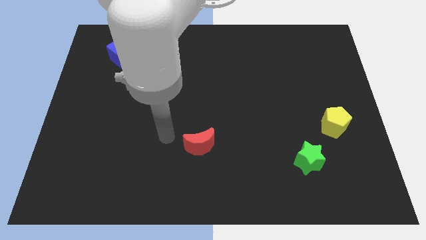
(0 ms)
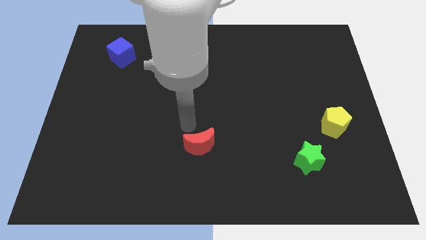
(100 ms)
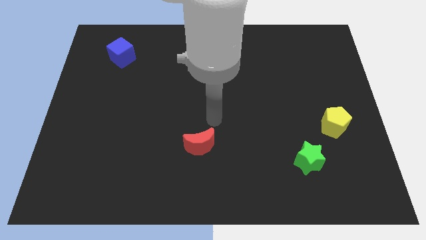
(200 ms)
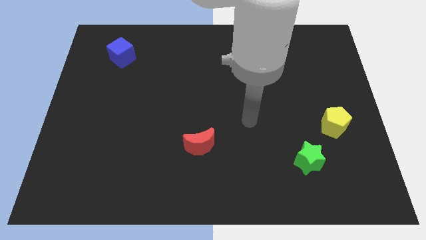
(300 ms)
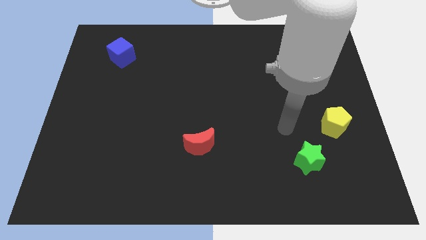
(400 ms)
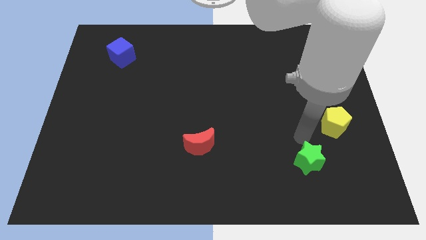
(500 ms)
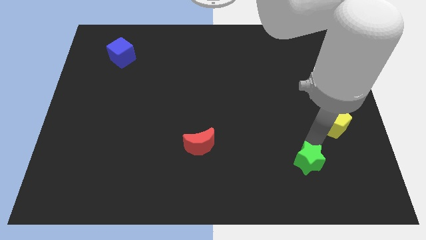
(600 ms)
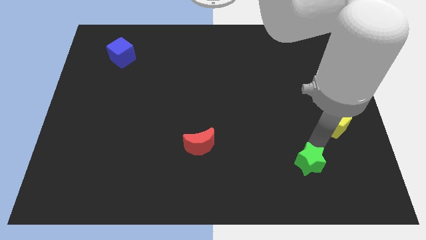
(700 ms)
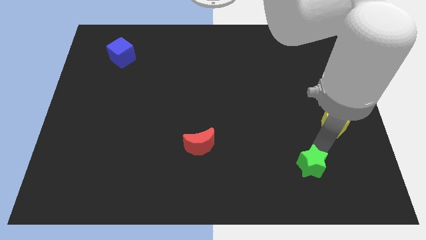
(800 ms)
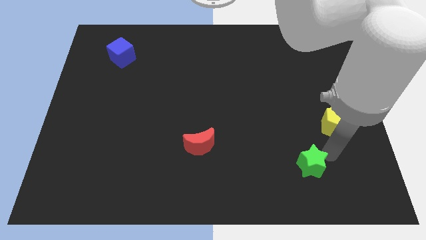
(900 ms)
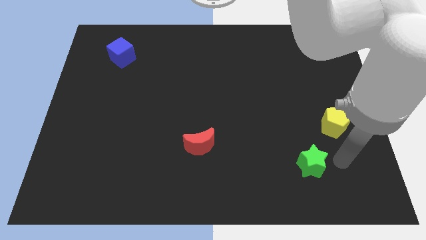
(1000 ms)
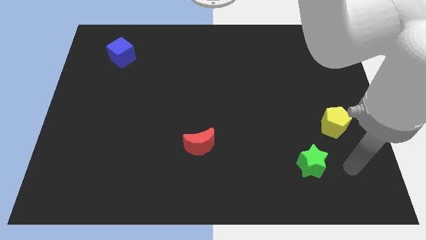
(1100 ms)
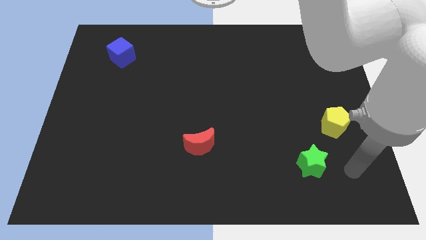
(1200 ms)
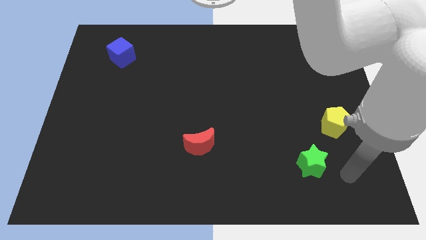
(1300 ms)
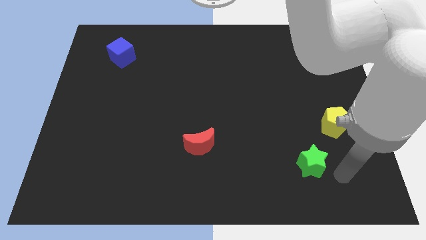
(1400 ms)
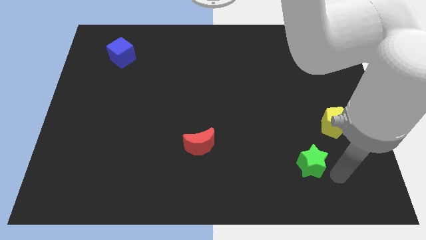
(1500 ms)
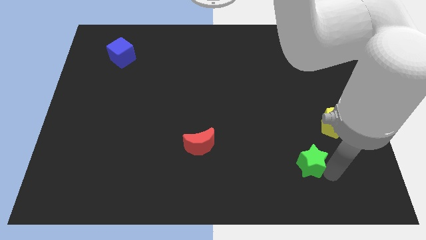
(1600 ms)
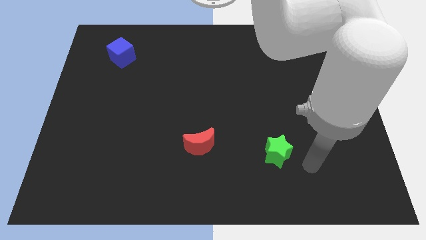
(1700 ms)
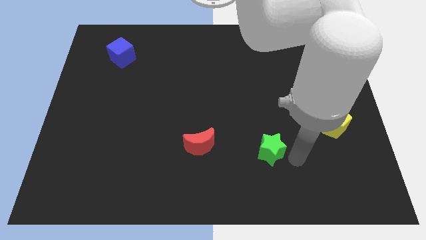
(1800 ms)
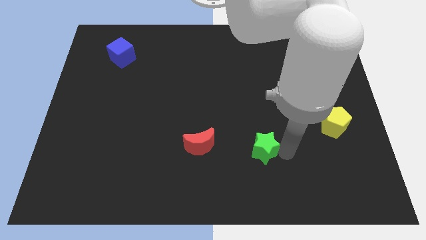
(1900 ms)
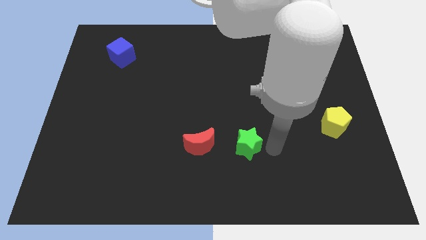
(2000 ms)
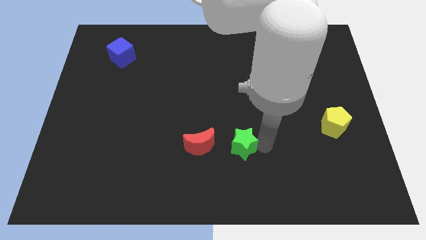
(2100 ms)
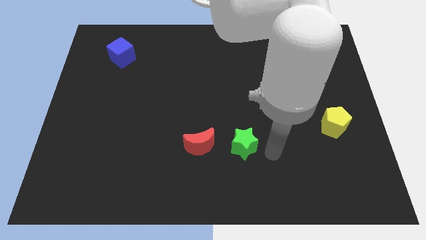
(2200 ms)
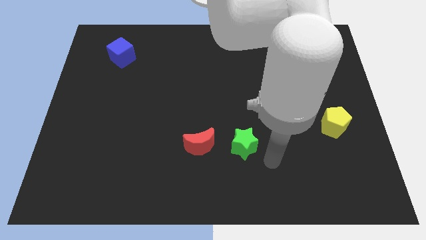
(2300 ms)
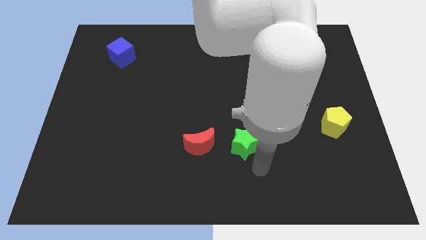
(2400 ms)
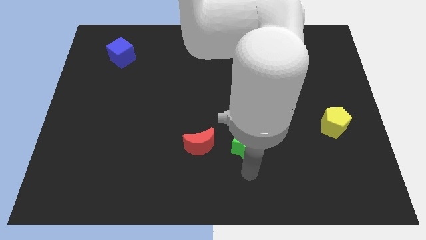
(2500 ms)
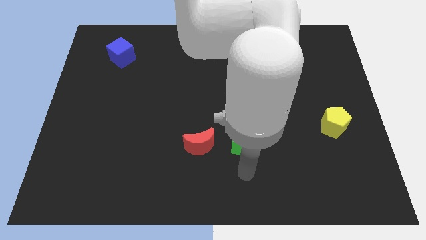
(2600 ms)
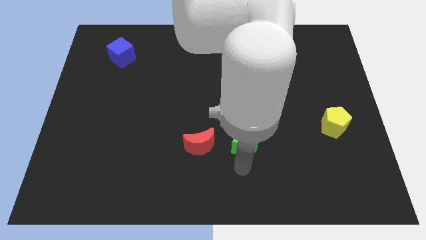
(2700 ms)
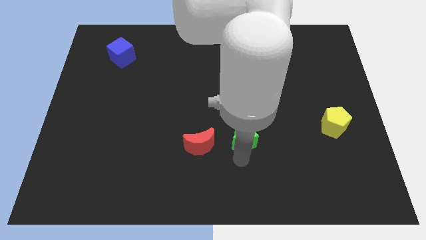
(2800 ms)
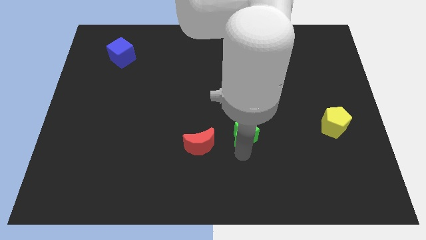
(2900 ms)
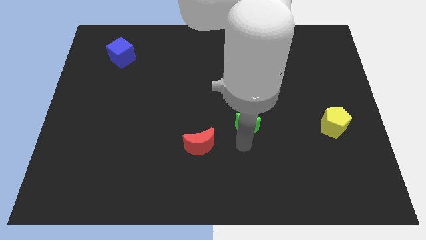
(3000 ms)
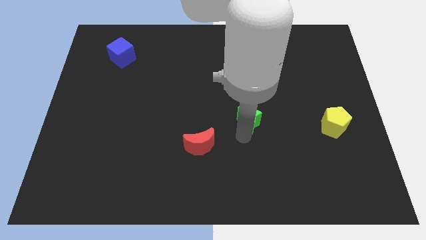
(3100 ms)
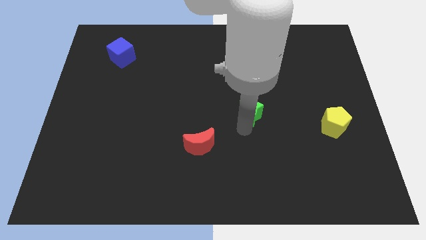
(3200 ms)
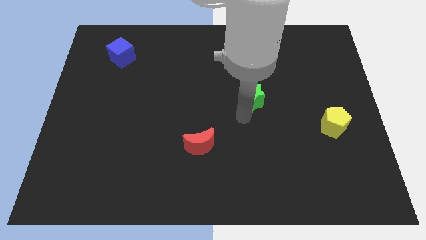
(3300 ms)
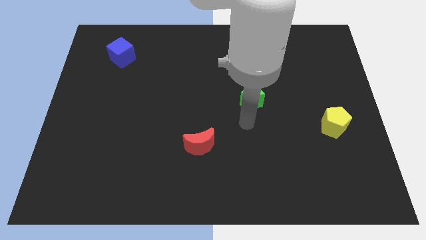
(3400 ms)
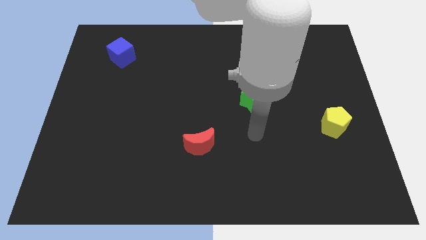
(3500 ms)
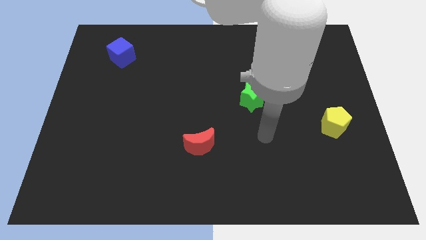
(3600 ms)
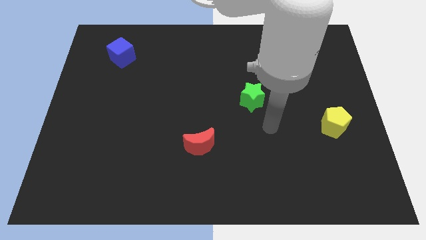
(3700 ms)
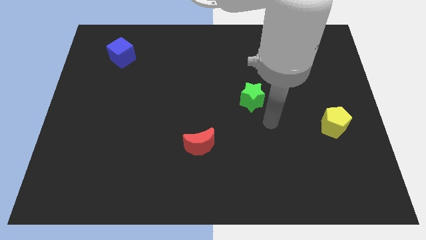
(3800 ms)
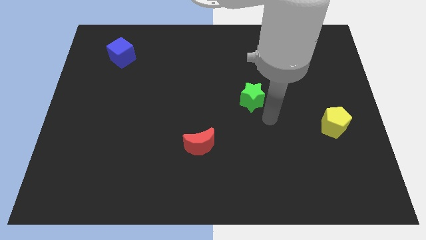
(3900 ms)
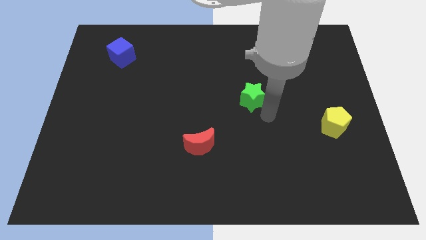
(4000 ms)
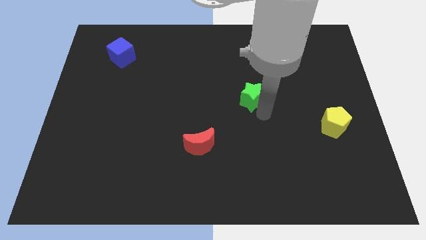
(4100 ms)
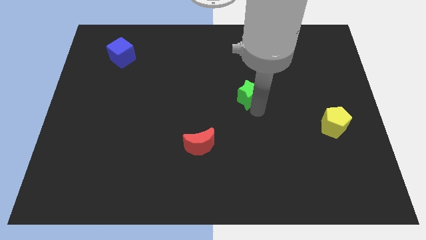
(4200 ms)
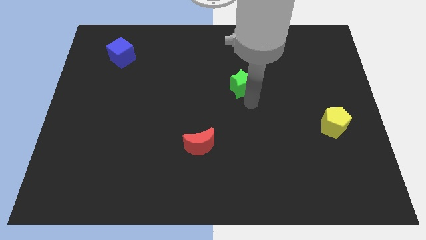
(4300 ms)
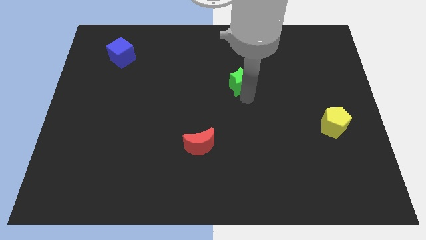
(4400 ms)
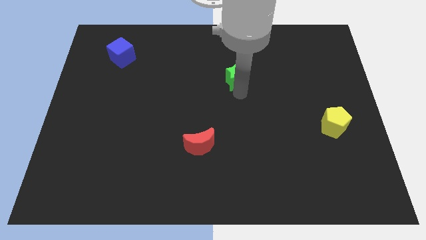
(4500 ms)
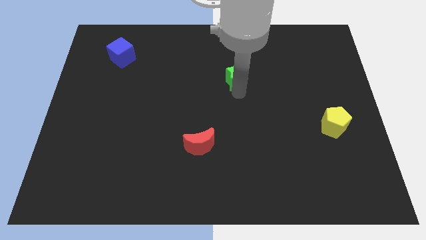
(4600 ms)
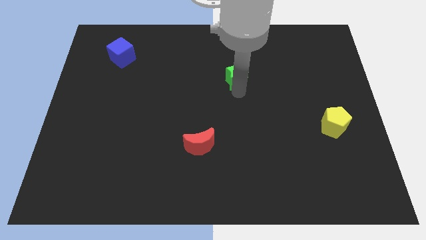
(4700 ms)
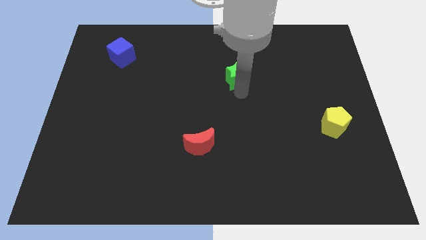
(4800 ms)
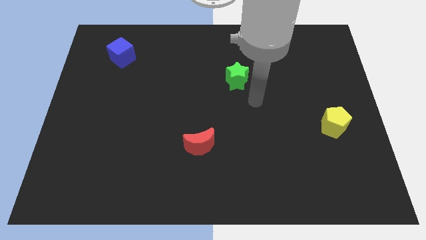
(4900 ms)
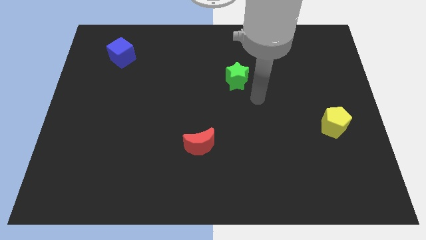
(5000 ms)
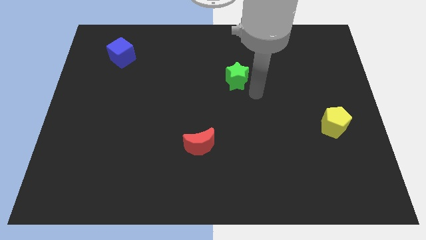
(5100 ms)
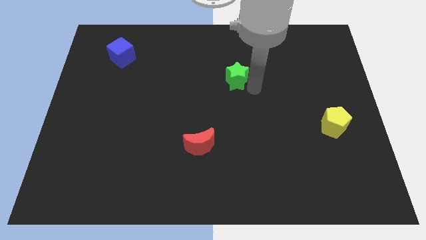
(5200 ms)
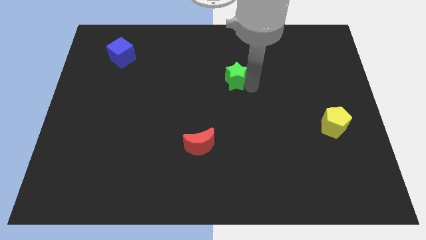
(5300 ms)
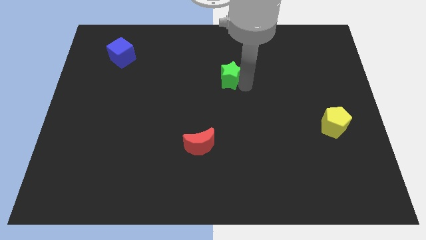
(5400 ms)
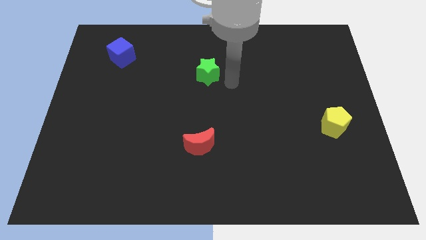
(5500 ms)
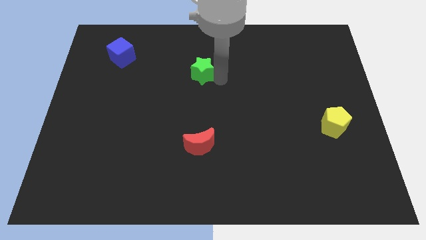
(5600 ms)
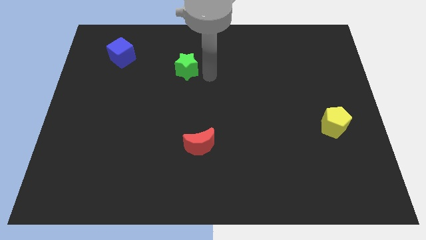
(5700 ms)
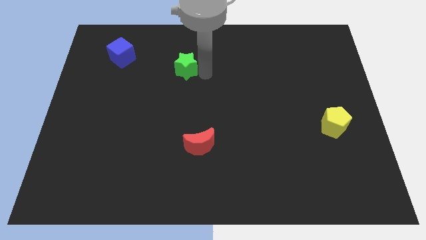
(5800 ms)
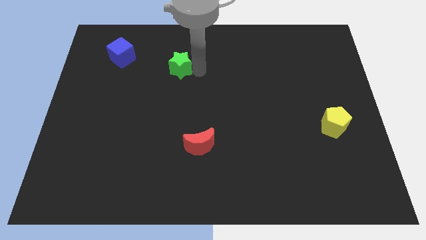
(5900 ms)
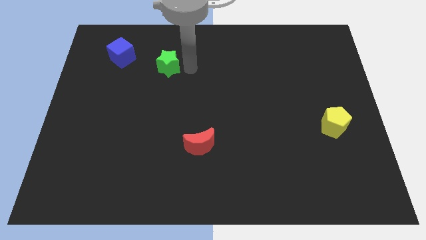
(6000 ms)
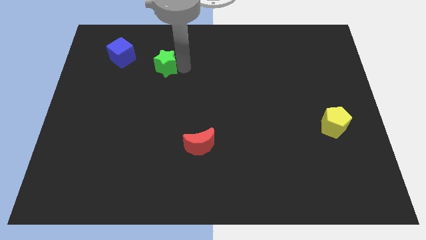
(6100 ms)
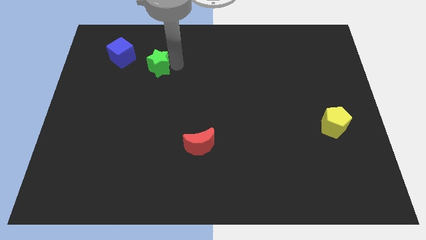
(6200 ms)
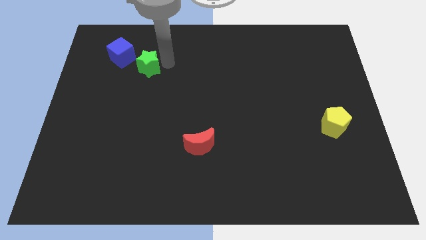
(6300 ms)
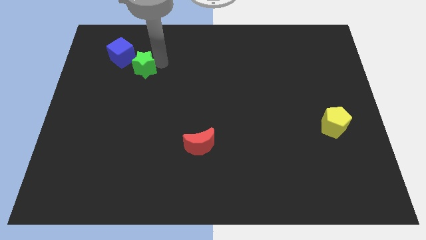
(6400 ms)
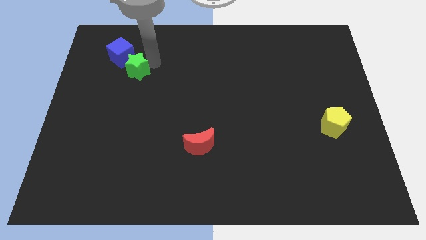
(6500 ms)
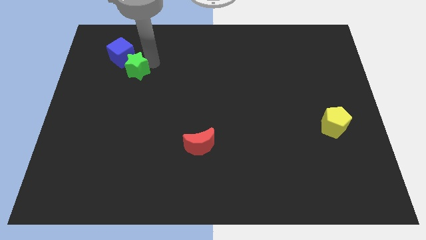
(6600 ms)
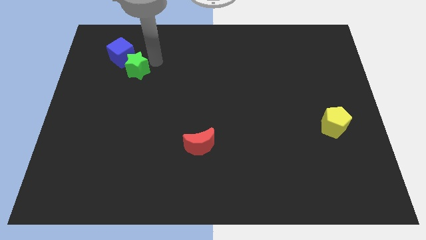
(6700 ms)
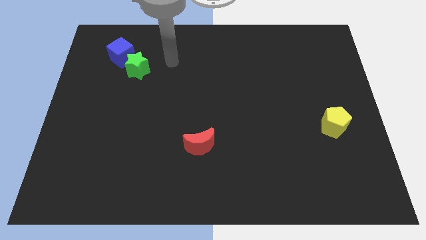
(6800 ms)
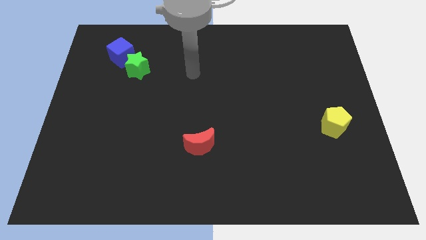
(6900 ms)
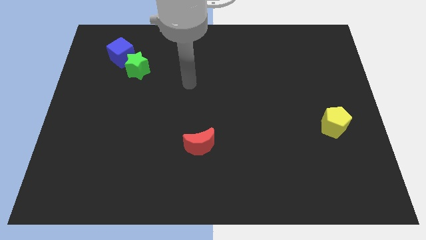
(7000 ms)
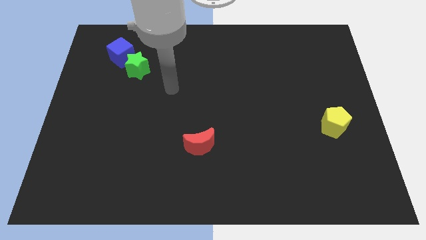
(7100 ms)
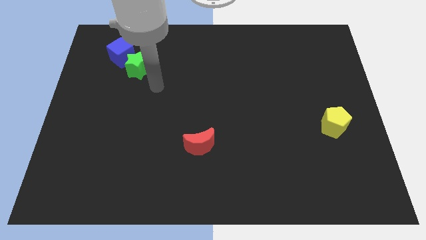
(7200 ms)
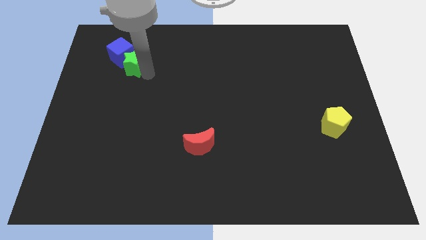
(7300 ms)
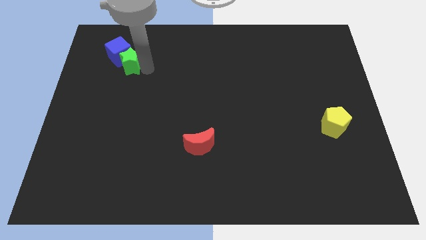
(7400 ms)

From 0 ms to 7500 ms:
slide the green star next to the blue block

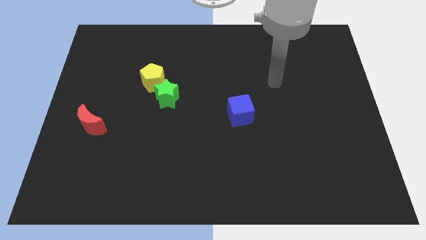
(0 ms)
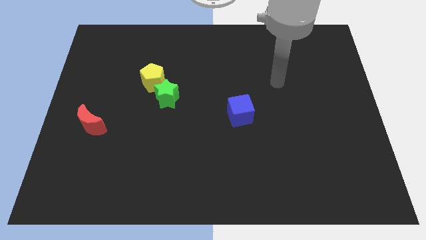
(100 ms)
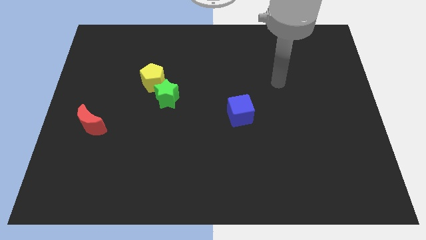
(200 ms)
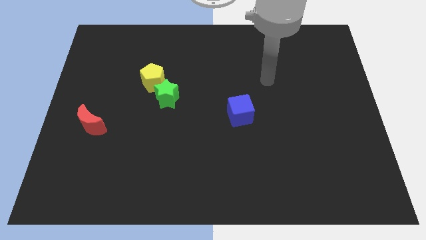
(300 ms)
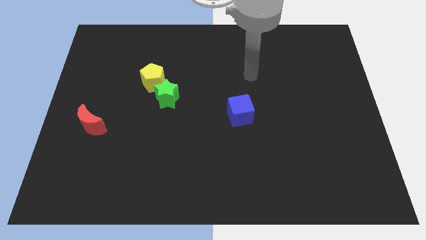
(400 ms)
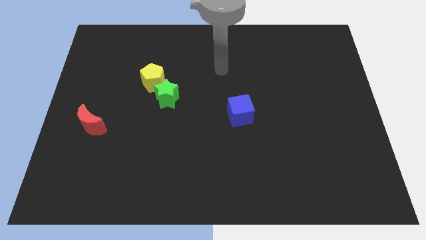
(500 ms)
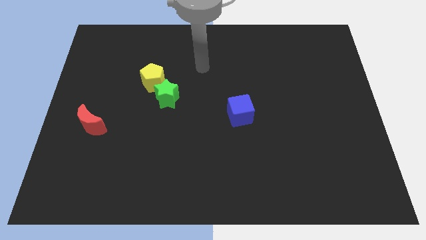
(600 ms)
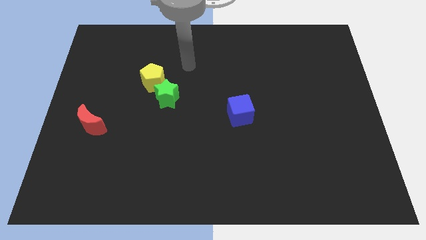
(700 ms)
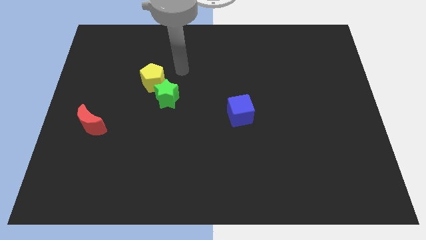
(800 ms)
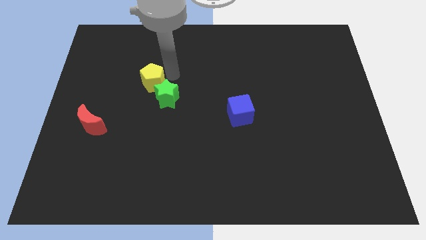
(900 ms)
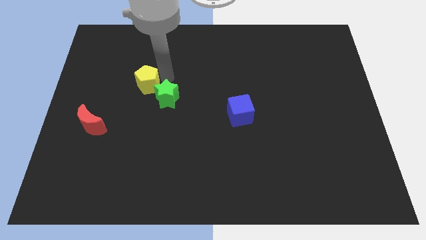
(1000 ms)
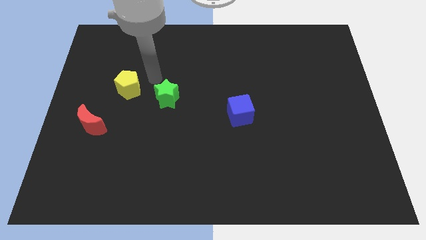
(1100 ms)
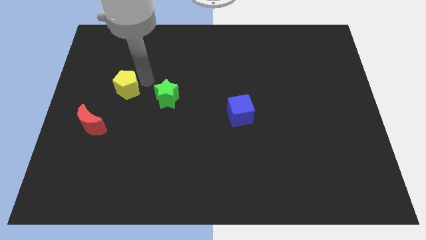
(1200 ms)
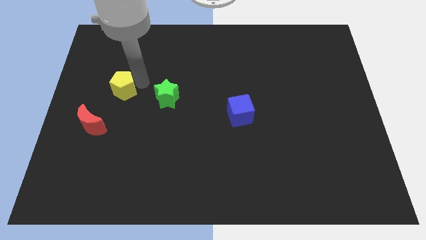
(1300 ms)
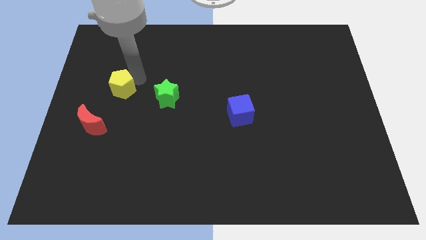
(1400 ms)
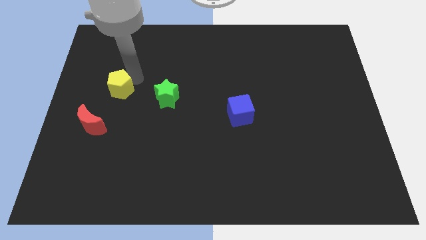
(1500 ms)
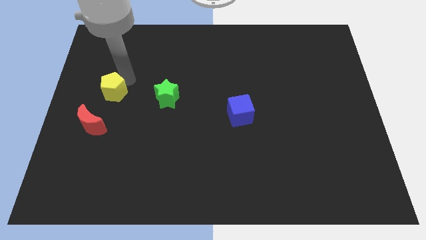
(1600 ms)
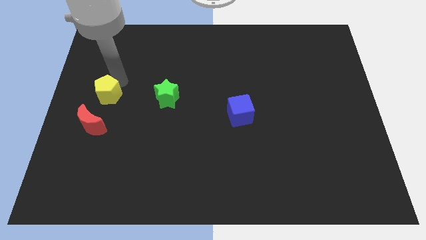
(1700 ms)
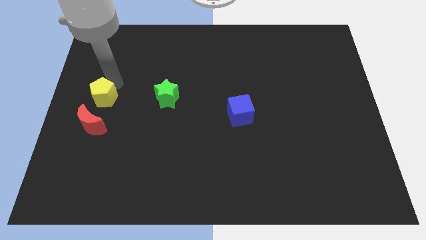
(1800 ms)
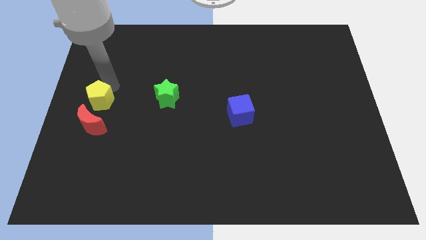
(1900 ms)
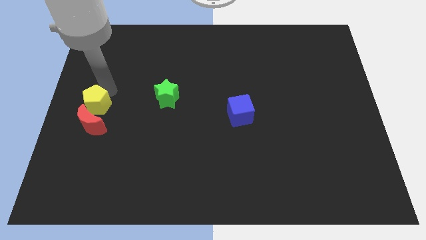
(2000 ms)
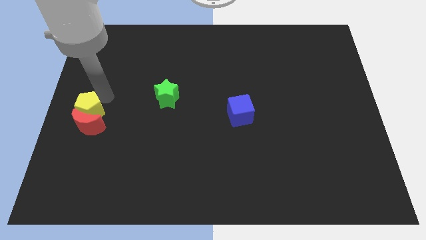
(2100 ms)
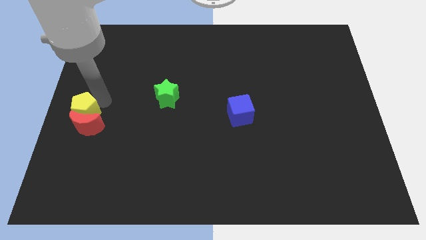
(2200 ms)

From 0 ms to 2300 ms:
move the pentagon next to the red block
